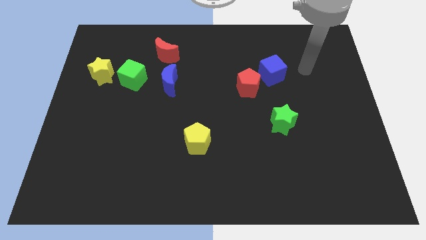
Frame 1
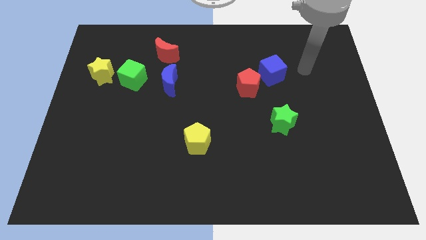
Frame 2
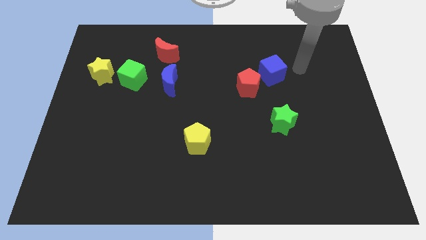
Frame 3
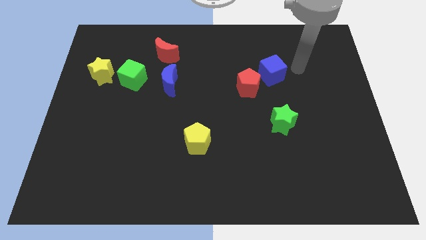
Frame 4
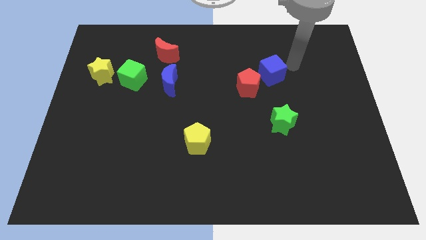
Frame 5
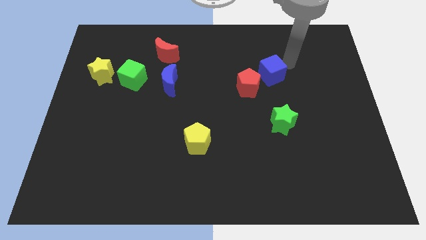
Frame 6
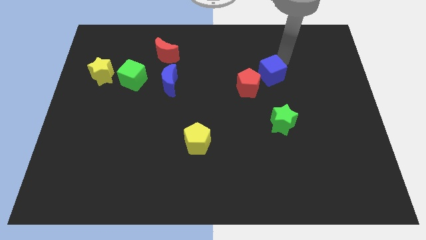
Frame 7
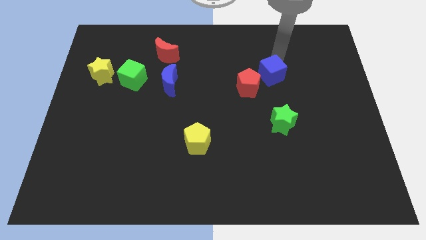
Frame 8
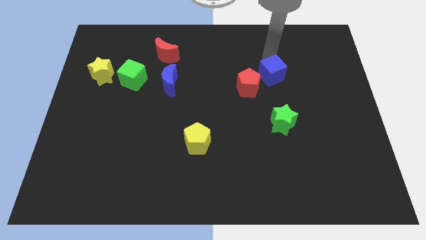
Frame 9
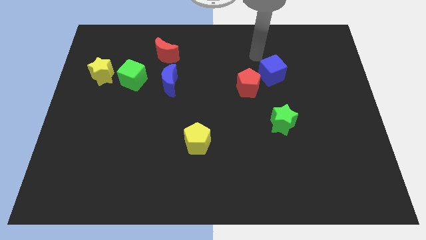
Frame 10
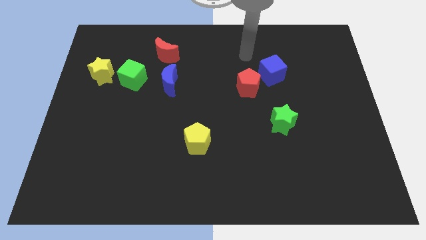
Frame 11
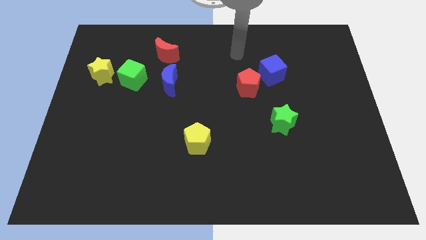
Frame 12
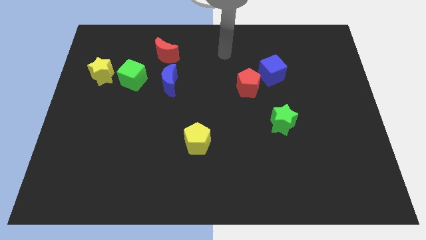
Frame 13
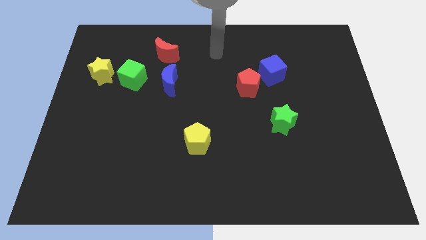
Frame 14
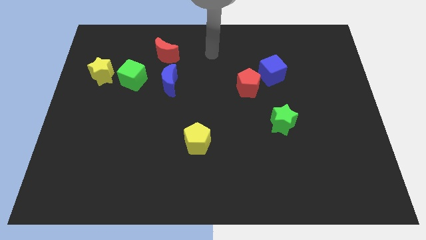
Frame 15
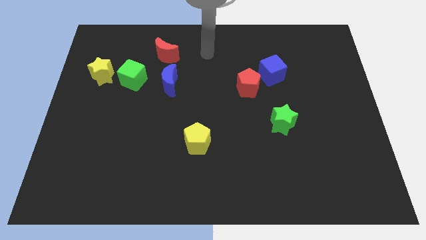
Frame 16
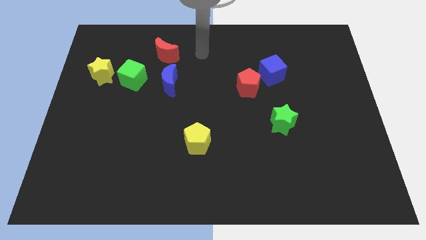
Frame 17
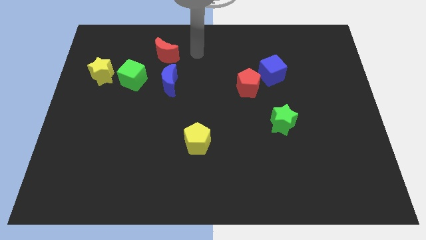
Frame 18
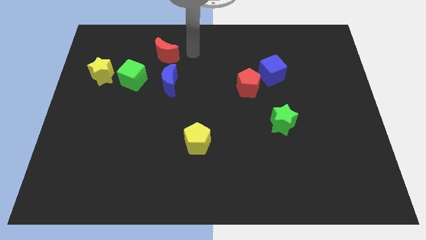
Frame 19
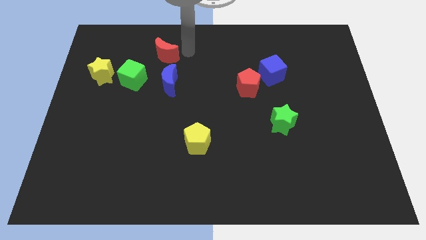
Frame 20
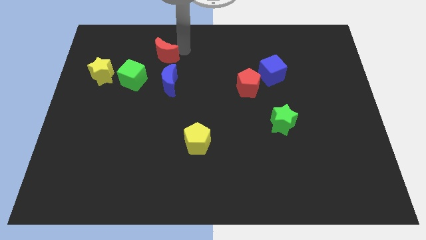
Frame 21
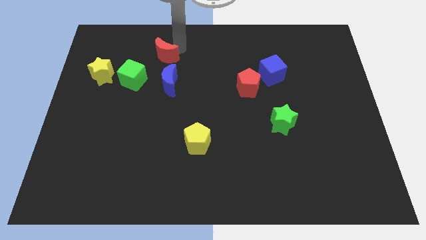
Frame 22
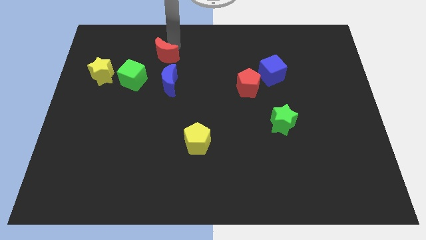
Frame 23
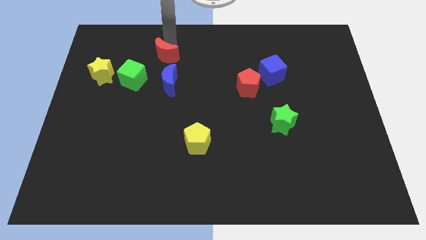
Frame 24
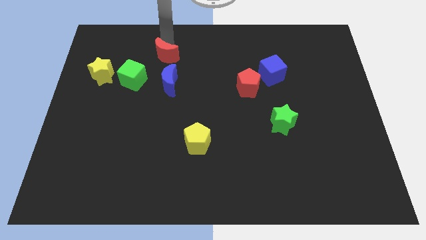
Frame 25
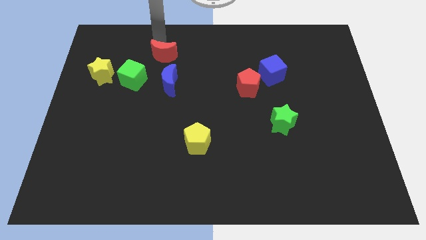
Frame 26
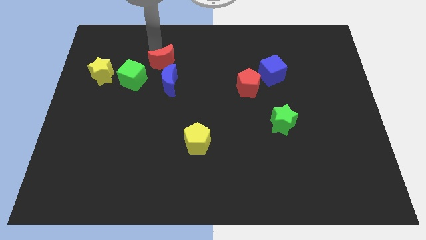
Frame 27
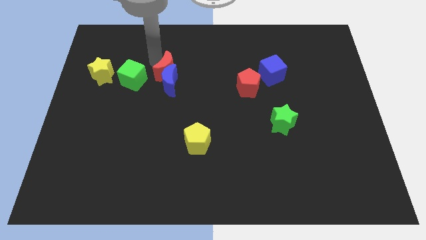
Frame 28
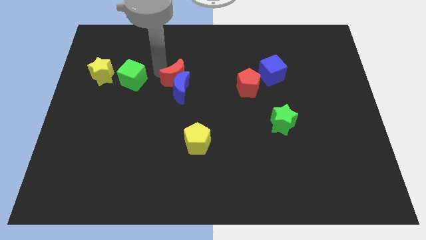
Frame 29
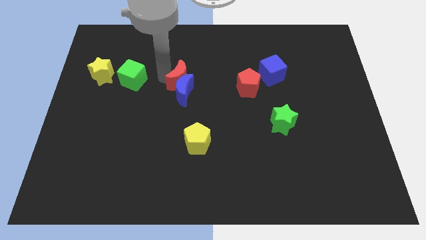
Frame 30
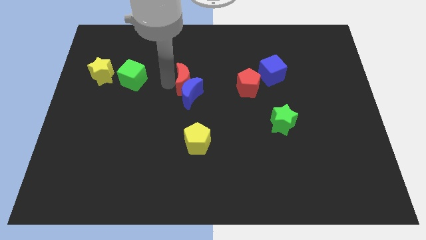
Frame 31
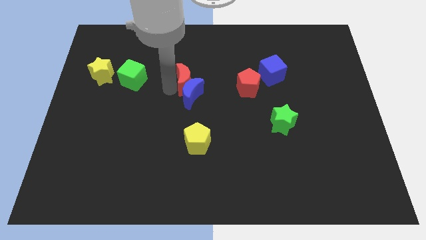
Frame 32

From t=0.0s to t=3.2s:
push the red crescent into blue crescent

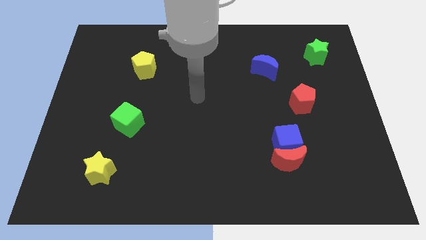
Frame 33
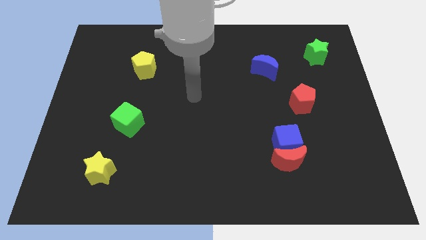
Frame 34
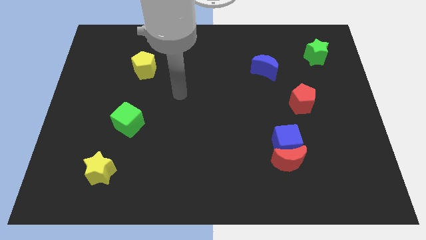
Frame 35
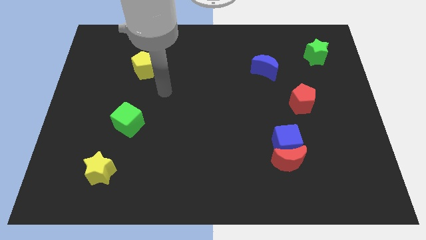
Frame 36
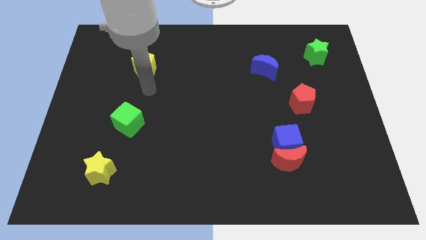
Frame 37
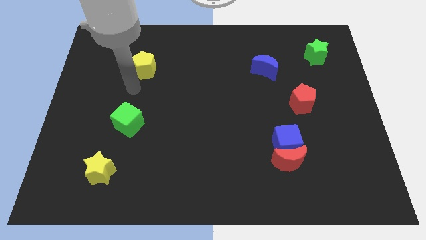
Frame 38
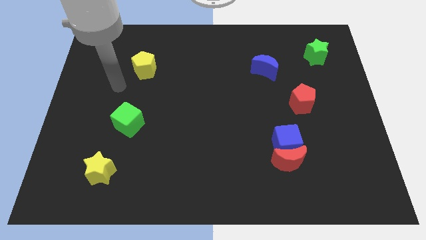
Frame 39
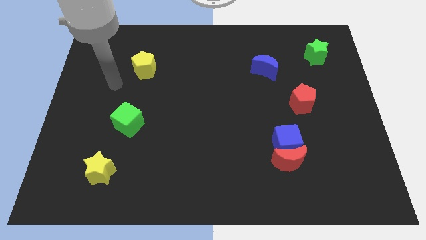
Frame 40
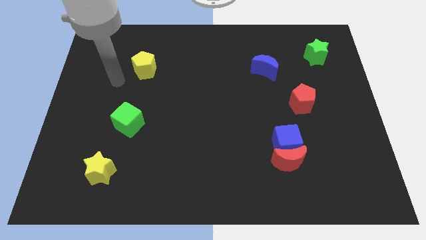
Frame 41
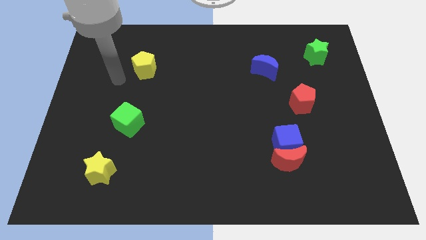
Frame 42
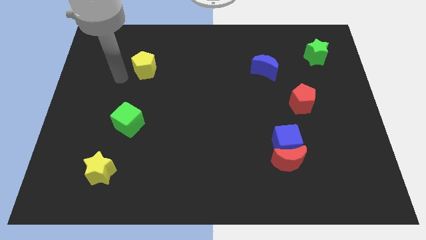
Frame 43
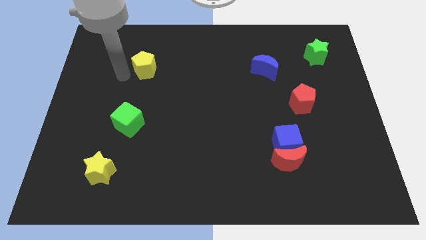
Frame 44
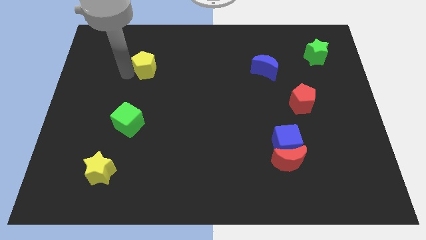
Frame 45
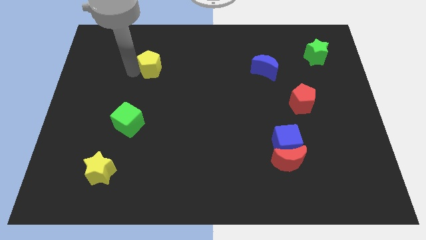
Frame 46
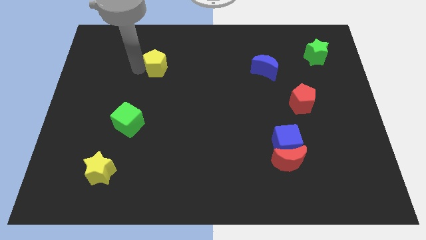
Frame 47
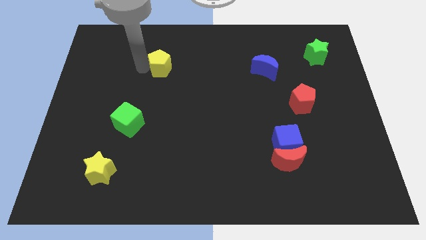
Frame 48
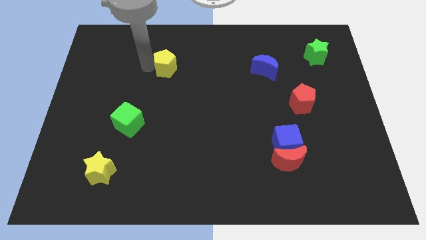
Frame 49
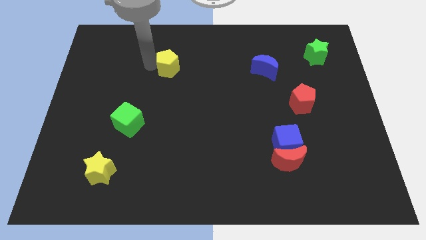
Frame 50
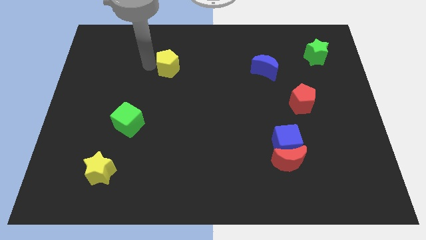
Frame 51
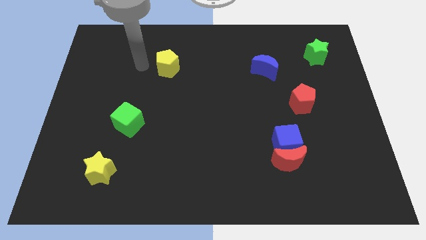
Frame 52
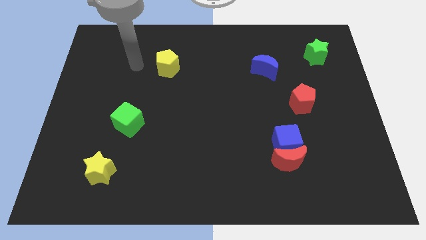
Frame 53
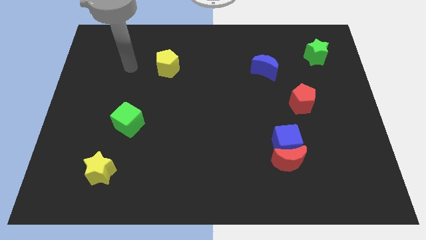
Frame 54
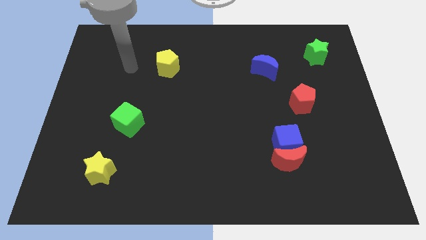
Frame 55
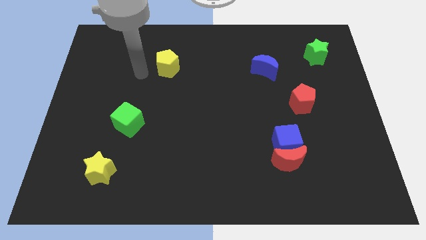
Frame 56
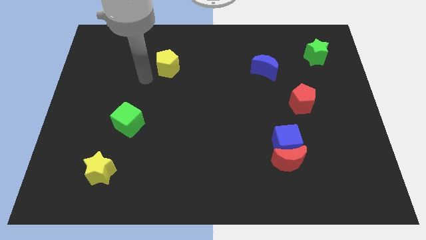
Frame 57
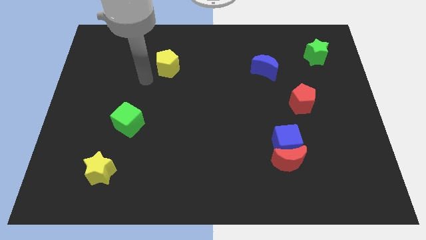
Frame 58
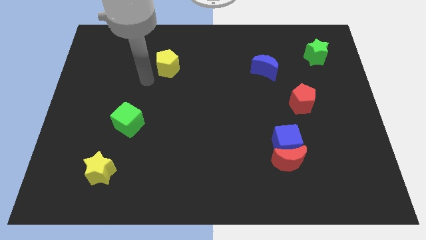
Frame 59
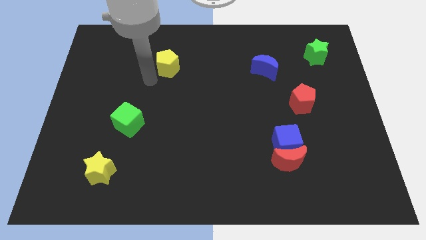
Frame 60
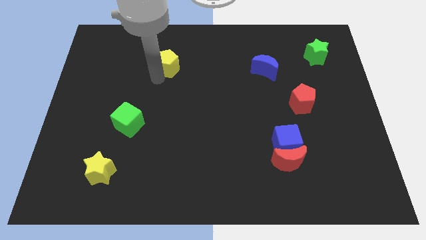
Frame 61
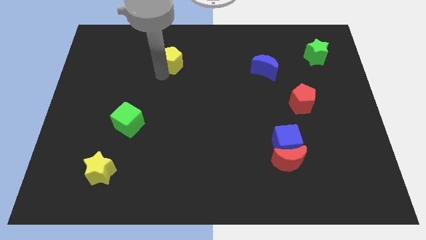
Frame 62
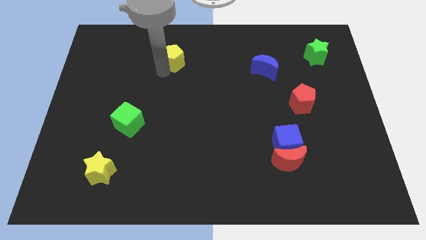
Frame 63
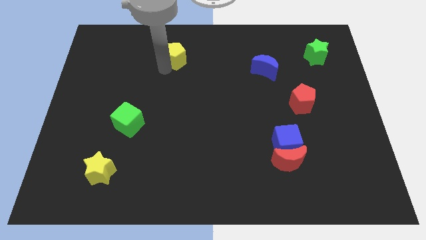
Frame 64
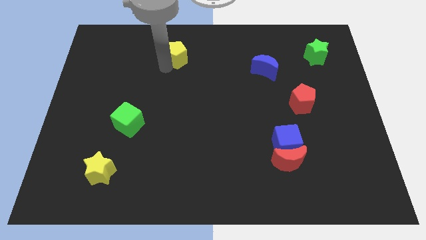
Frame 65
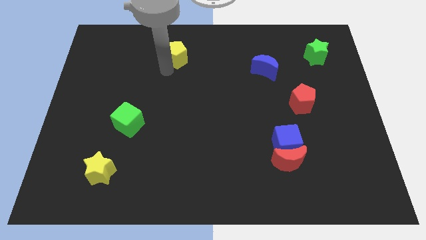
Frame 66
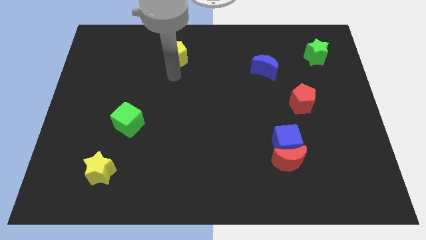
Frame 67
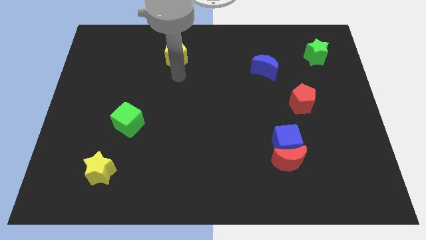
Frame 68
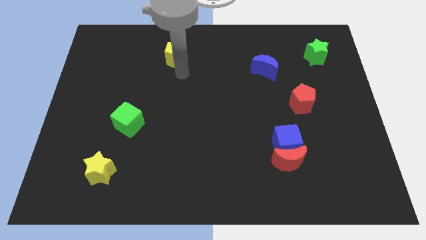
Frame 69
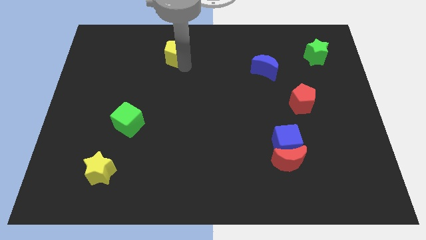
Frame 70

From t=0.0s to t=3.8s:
move the yellow pentagon towards top center of the board

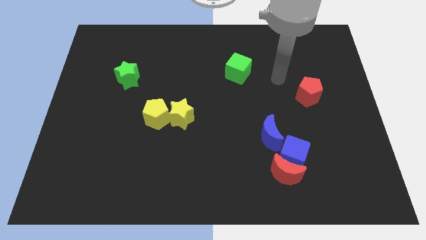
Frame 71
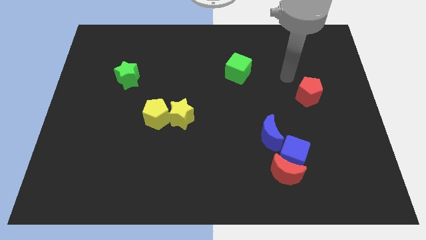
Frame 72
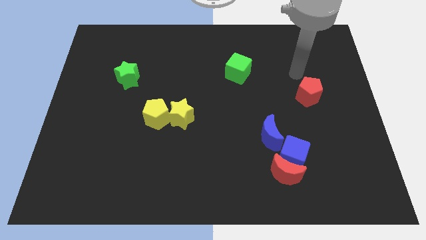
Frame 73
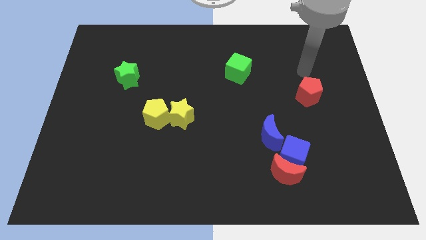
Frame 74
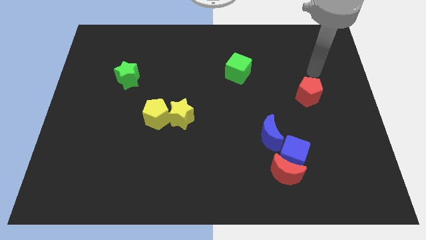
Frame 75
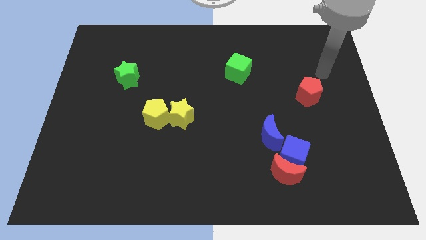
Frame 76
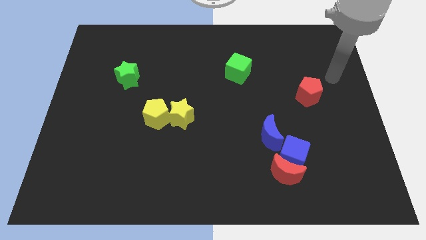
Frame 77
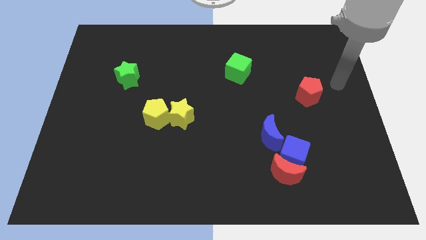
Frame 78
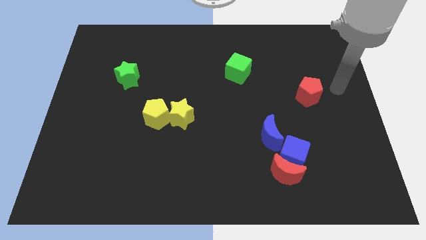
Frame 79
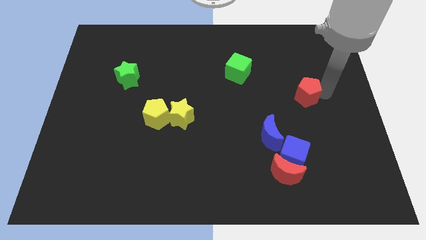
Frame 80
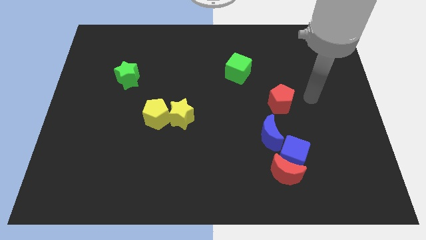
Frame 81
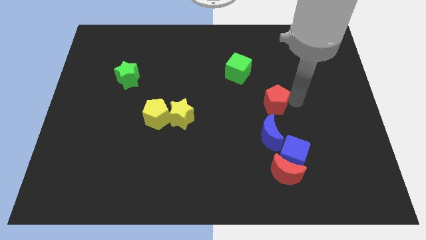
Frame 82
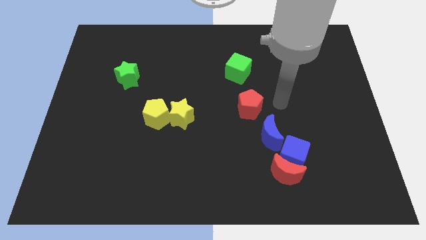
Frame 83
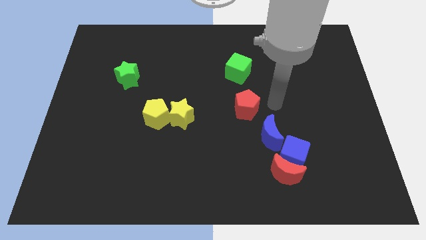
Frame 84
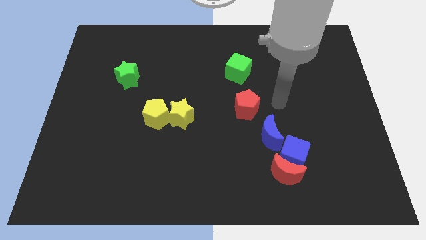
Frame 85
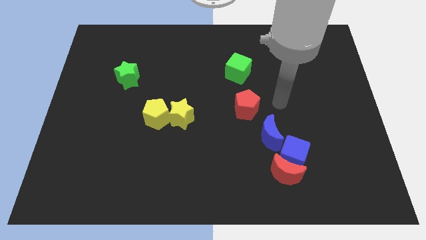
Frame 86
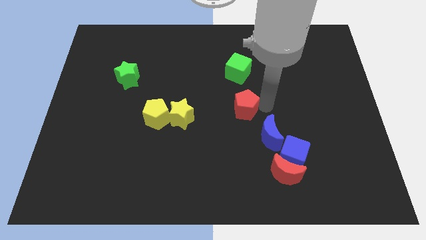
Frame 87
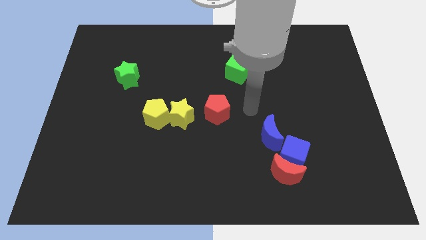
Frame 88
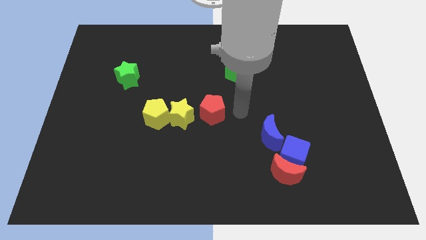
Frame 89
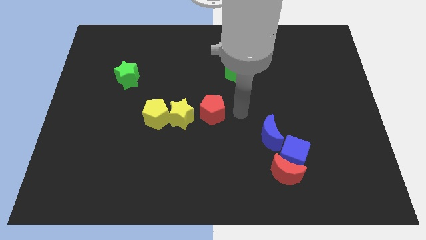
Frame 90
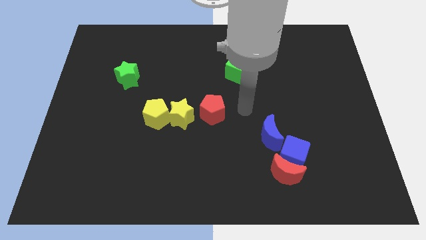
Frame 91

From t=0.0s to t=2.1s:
push the red pentagon close to the yellow star
